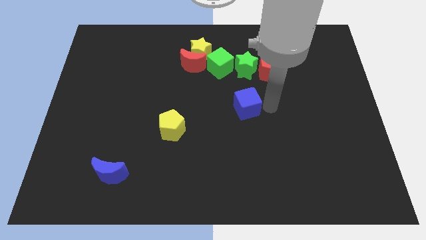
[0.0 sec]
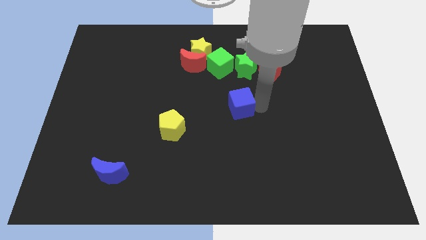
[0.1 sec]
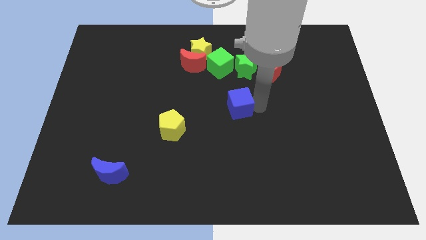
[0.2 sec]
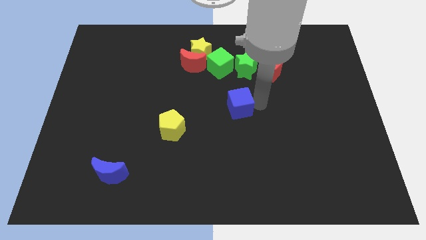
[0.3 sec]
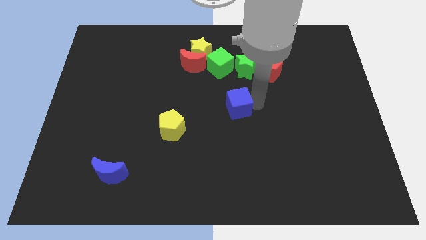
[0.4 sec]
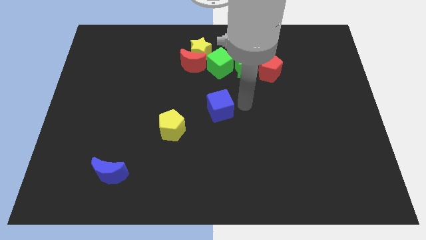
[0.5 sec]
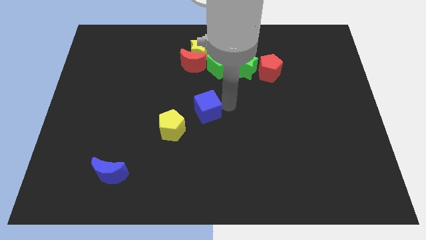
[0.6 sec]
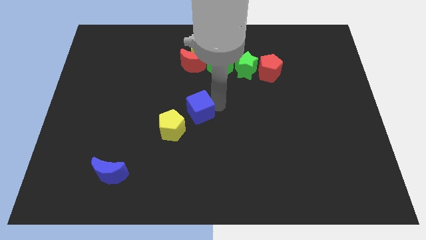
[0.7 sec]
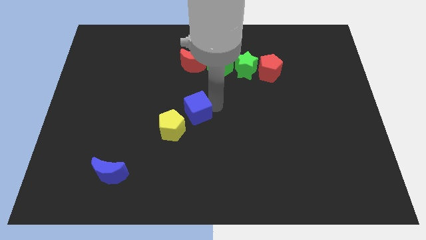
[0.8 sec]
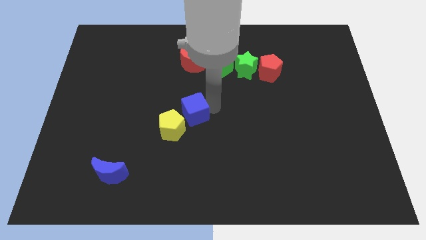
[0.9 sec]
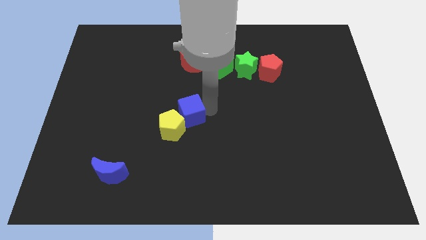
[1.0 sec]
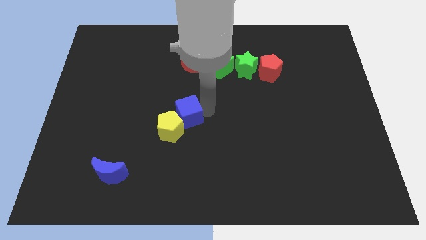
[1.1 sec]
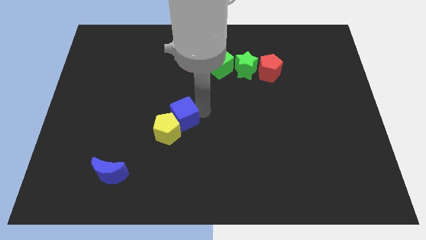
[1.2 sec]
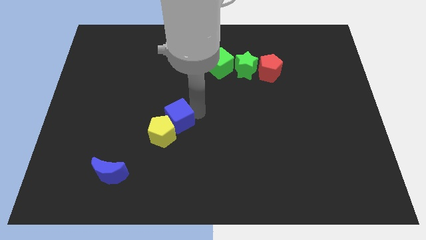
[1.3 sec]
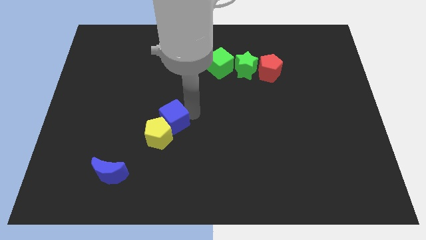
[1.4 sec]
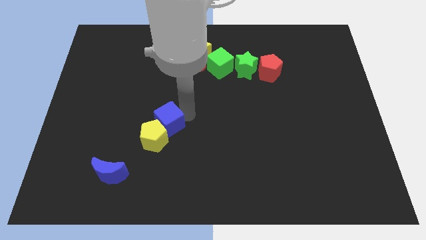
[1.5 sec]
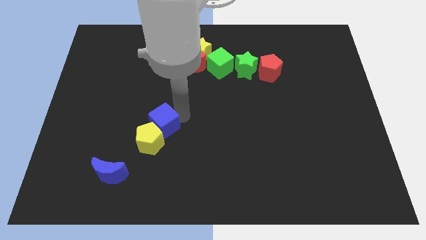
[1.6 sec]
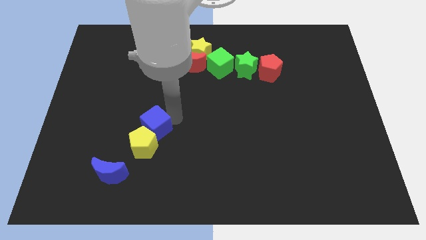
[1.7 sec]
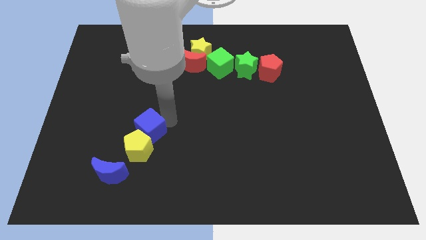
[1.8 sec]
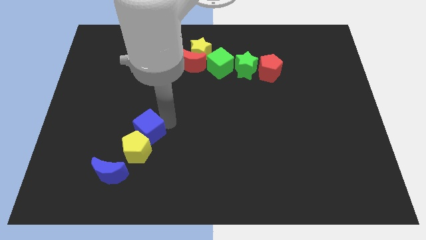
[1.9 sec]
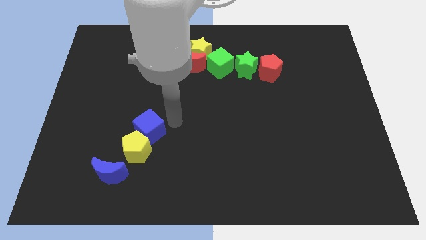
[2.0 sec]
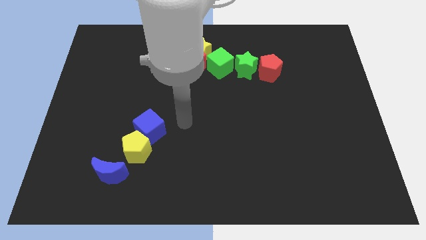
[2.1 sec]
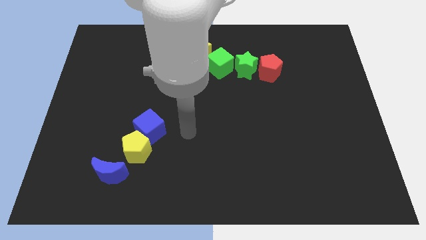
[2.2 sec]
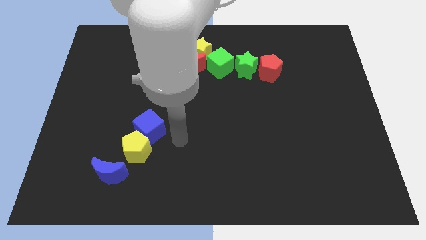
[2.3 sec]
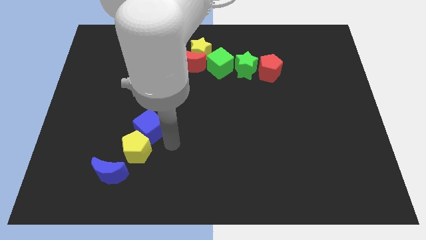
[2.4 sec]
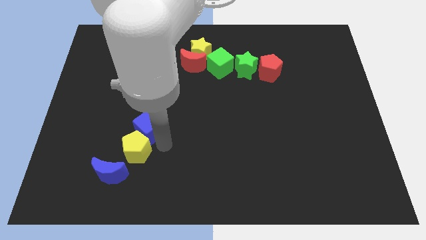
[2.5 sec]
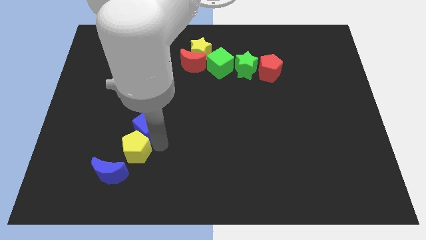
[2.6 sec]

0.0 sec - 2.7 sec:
push the blue cube into the yellow pentagon

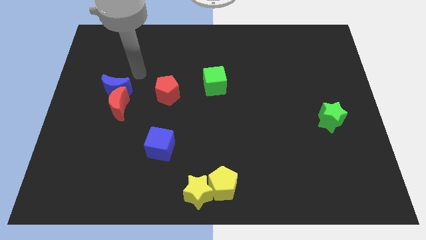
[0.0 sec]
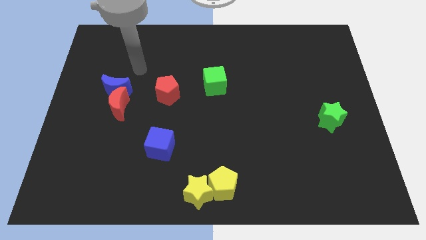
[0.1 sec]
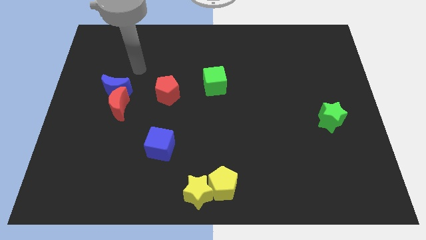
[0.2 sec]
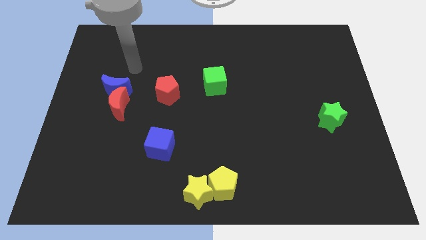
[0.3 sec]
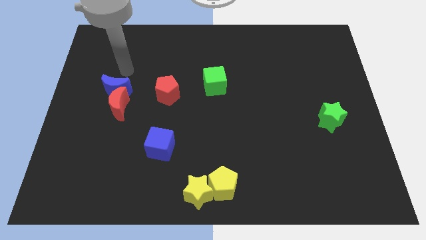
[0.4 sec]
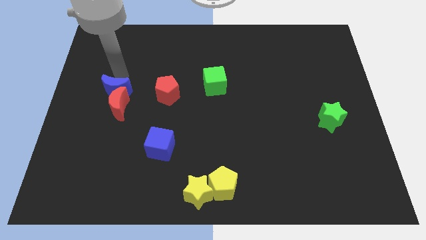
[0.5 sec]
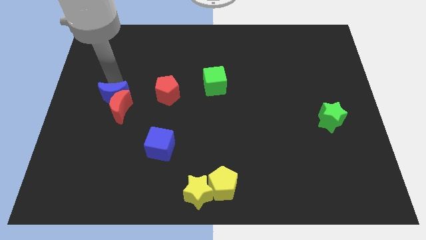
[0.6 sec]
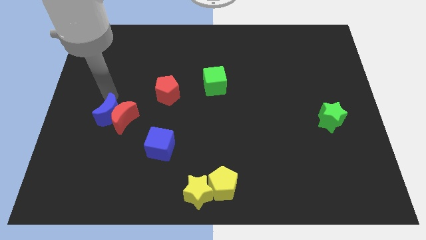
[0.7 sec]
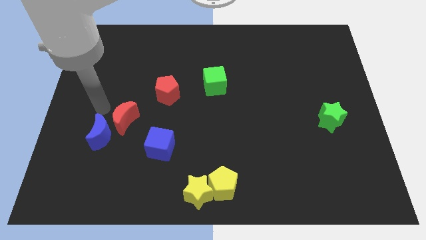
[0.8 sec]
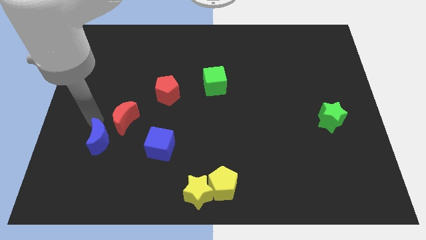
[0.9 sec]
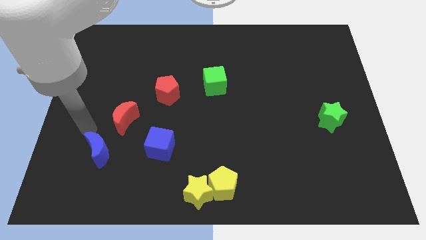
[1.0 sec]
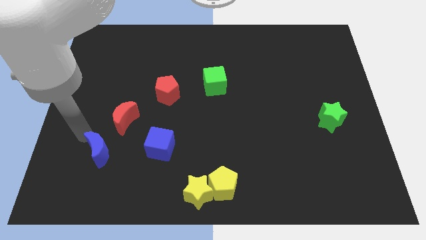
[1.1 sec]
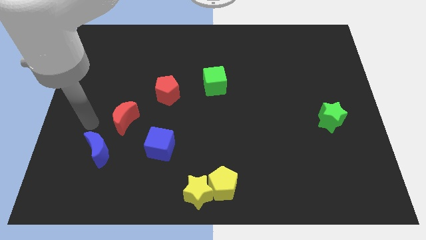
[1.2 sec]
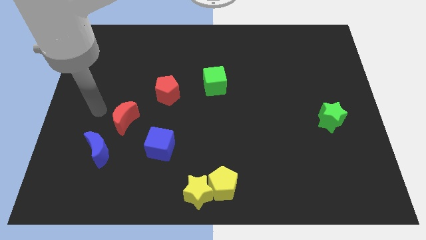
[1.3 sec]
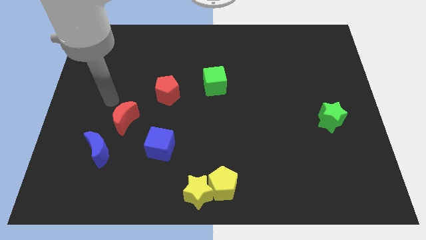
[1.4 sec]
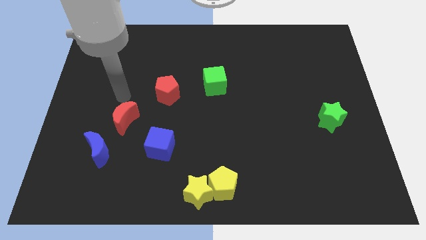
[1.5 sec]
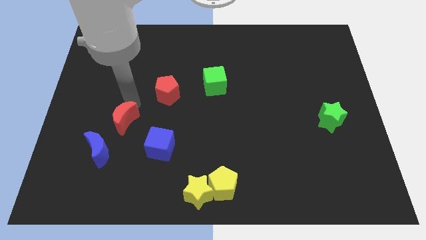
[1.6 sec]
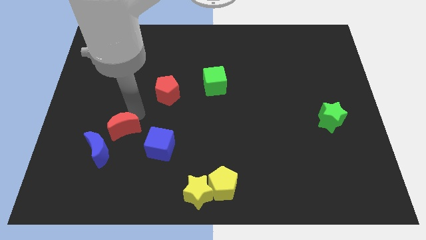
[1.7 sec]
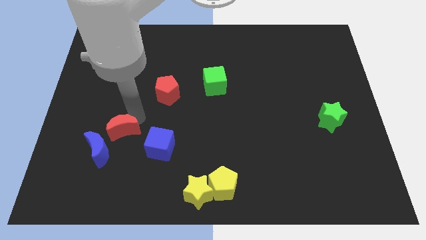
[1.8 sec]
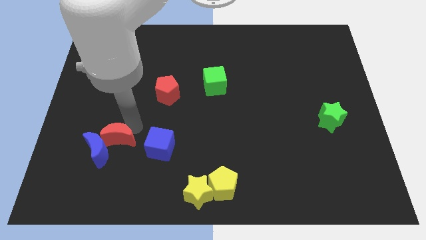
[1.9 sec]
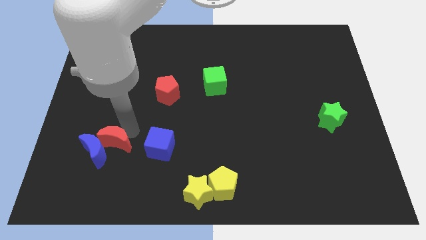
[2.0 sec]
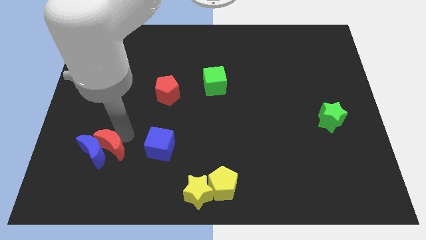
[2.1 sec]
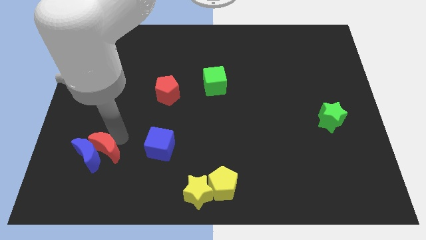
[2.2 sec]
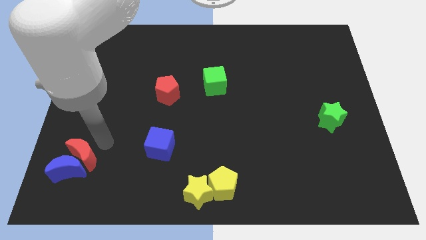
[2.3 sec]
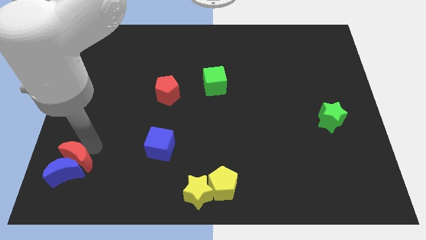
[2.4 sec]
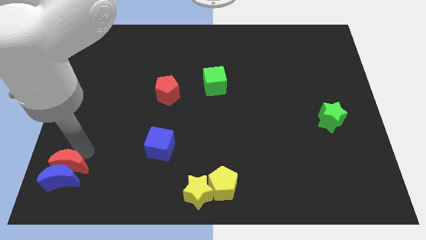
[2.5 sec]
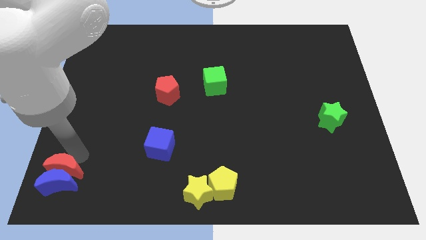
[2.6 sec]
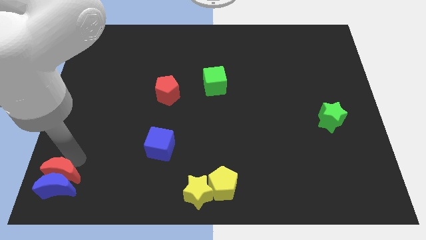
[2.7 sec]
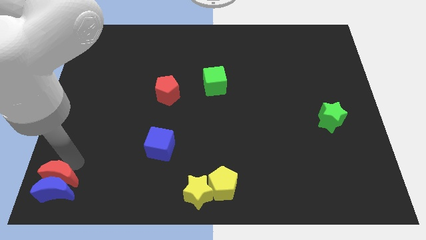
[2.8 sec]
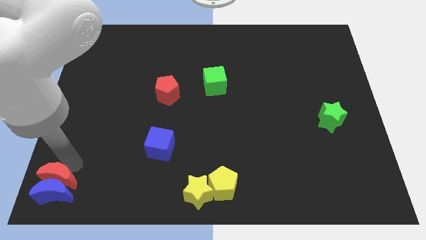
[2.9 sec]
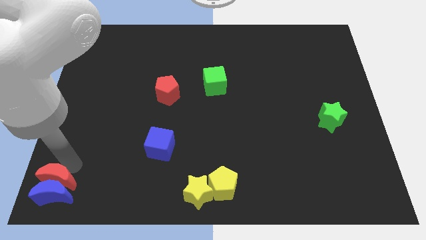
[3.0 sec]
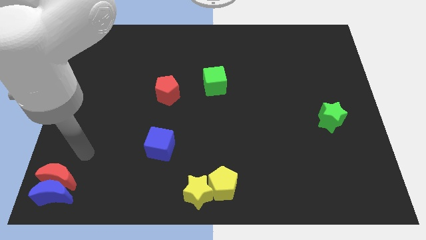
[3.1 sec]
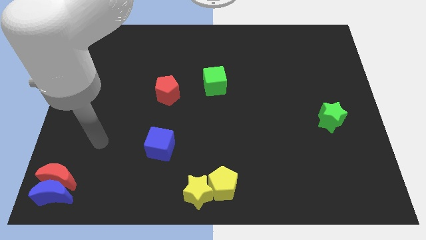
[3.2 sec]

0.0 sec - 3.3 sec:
place red crescent at bottom left

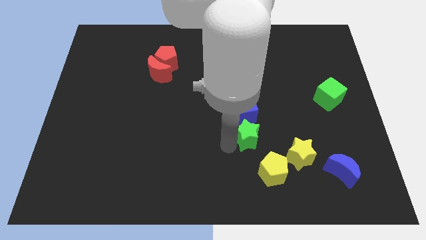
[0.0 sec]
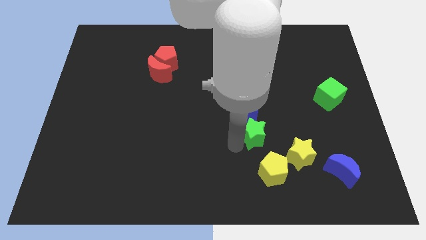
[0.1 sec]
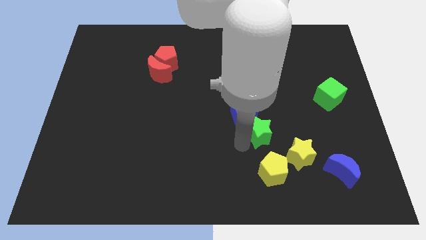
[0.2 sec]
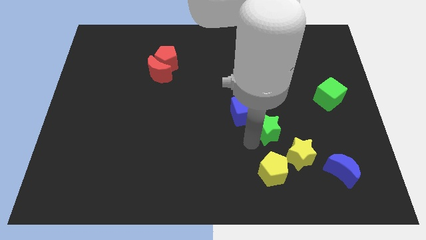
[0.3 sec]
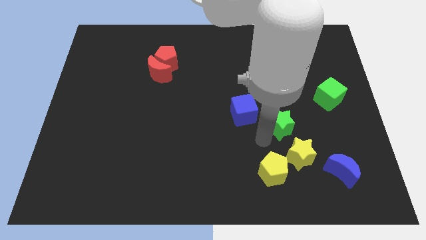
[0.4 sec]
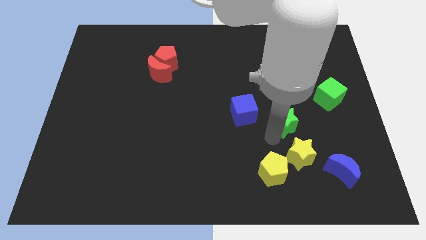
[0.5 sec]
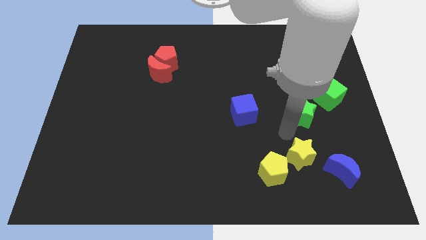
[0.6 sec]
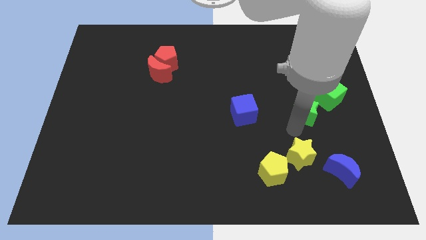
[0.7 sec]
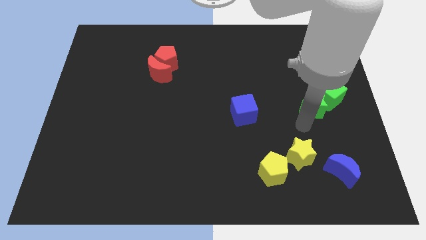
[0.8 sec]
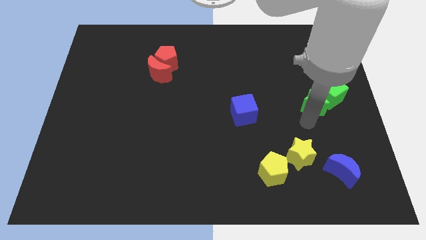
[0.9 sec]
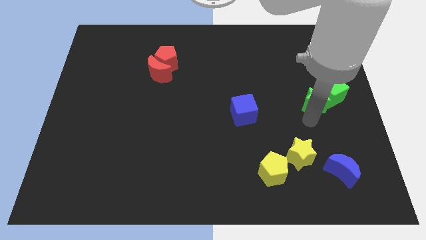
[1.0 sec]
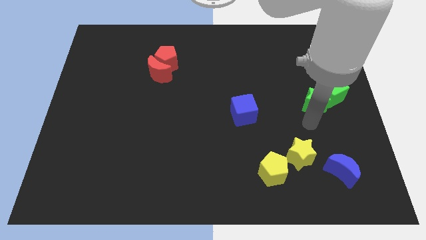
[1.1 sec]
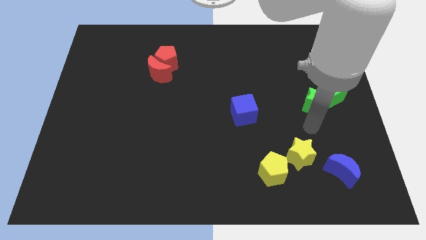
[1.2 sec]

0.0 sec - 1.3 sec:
push the green star into the green cube

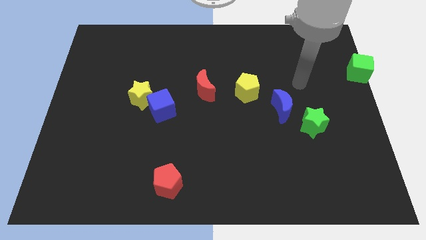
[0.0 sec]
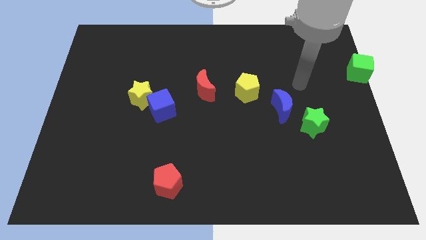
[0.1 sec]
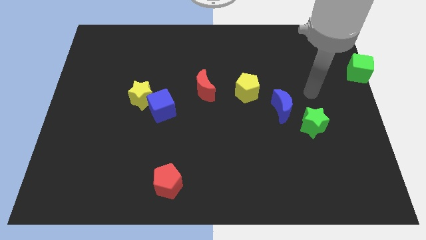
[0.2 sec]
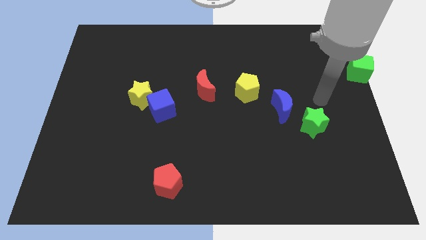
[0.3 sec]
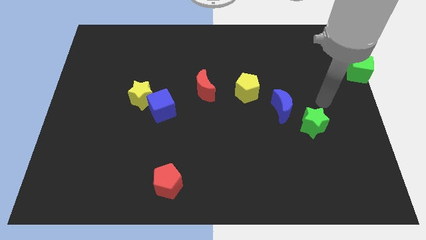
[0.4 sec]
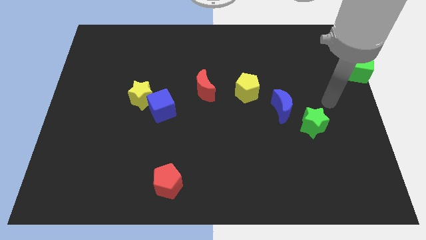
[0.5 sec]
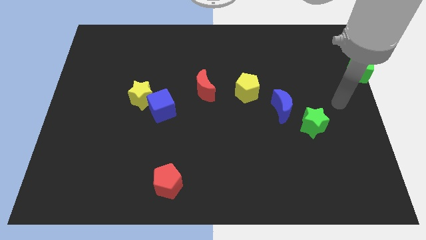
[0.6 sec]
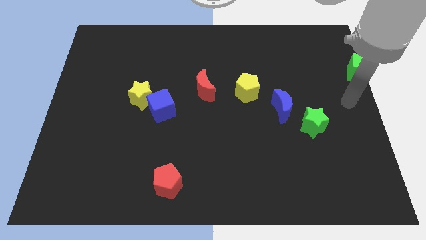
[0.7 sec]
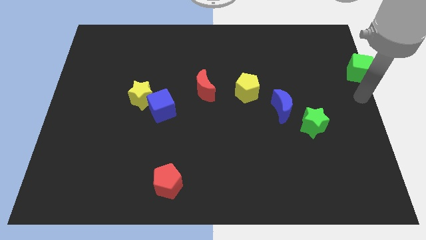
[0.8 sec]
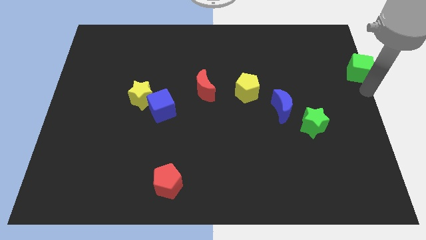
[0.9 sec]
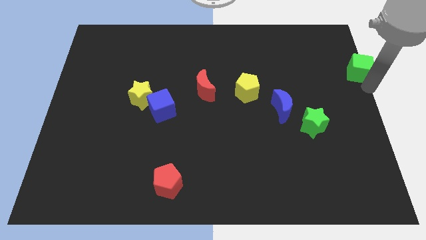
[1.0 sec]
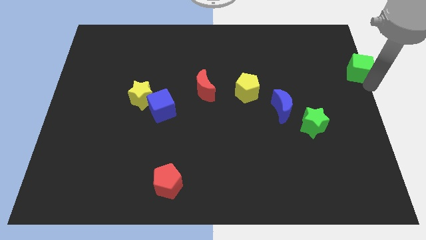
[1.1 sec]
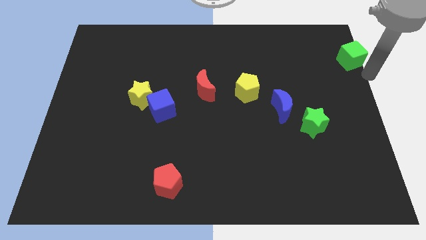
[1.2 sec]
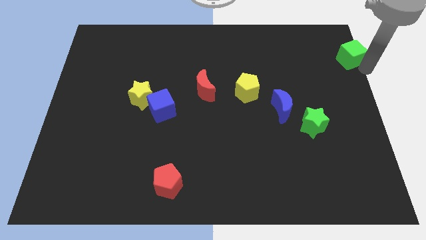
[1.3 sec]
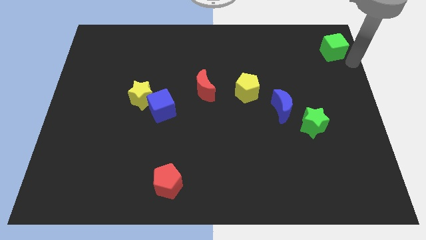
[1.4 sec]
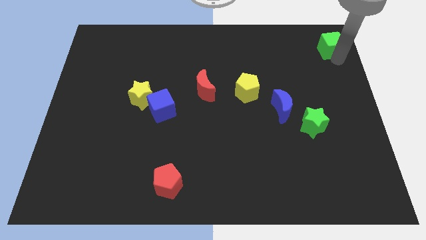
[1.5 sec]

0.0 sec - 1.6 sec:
slightly move the green cube towards the top
